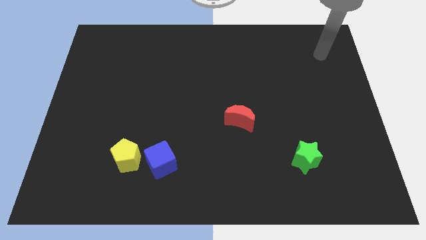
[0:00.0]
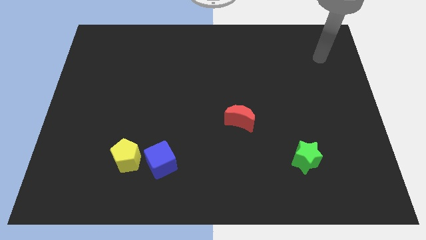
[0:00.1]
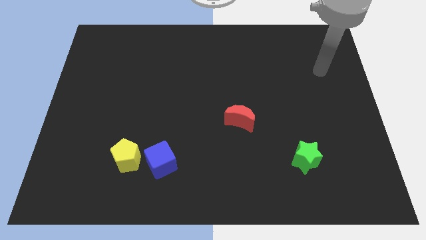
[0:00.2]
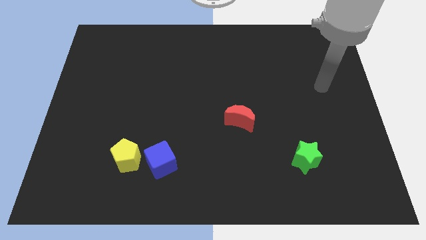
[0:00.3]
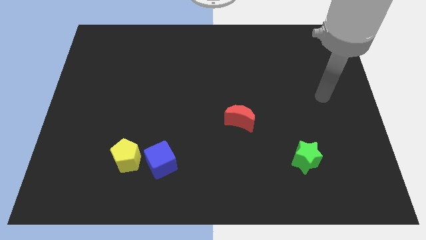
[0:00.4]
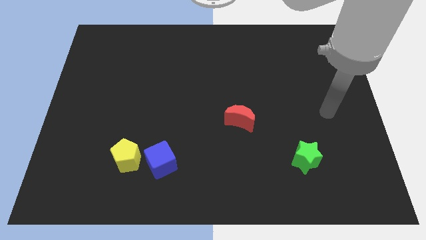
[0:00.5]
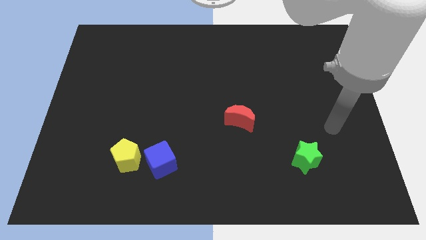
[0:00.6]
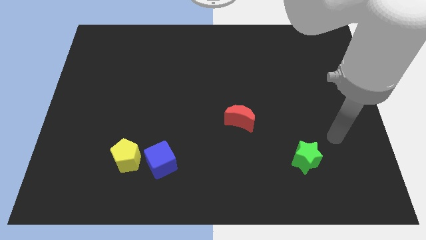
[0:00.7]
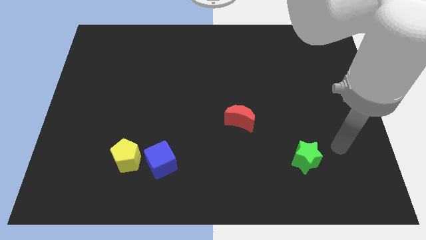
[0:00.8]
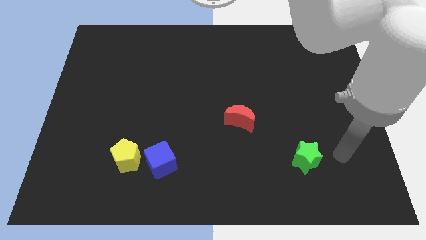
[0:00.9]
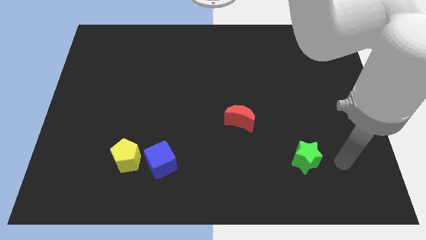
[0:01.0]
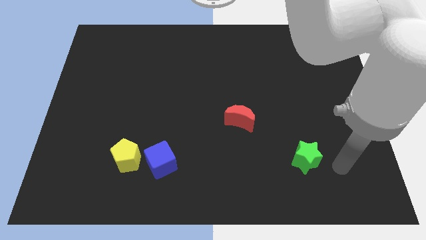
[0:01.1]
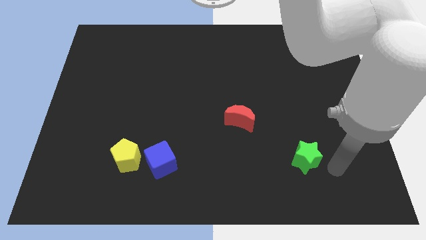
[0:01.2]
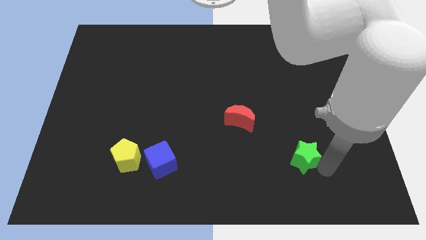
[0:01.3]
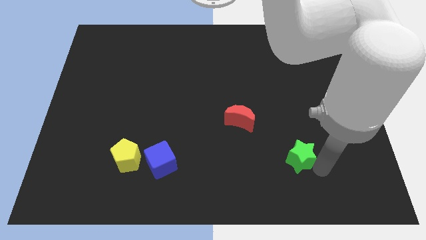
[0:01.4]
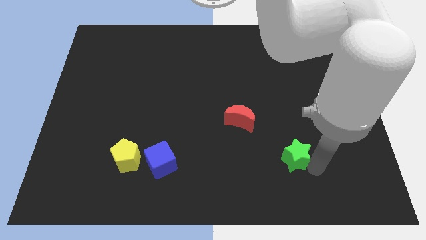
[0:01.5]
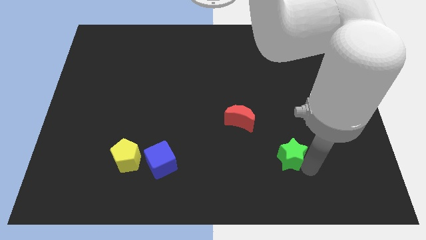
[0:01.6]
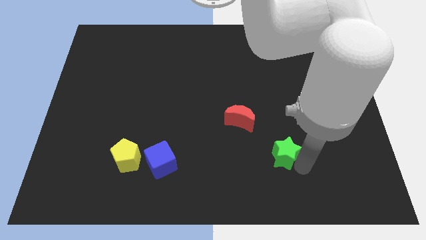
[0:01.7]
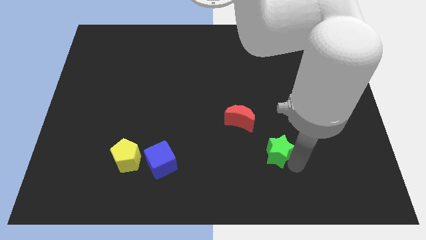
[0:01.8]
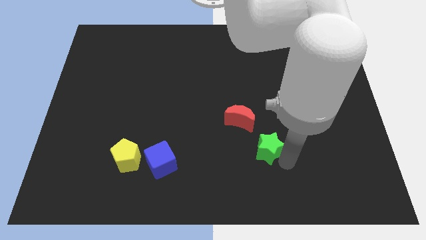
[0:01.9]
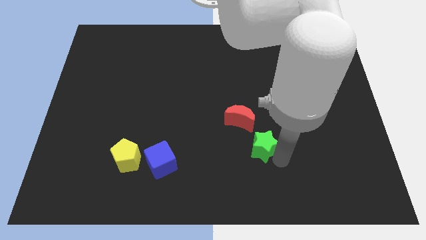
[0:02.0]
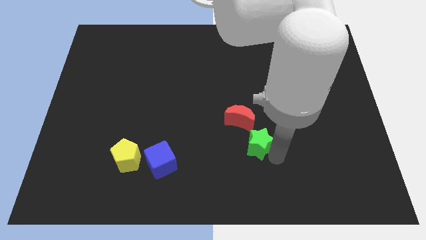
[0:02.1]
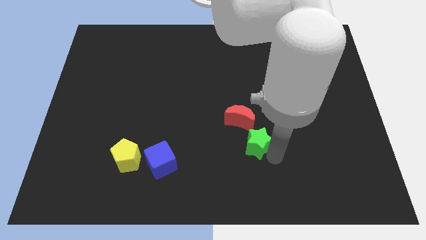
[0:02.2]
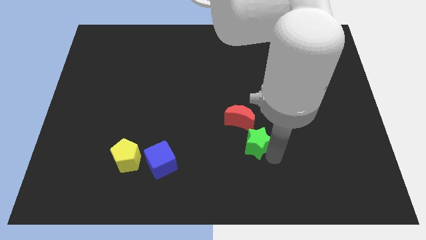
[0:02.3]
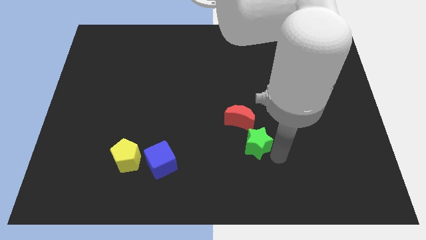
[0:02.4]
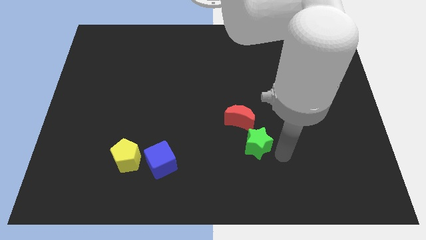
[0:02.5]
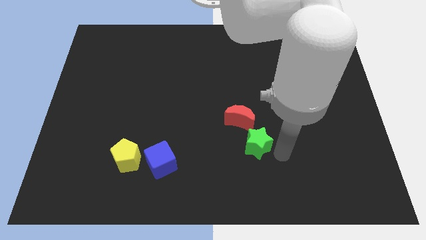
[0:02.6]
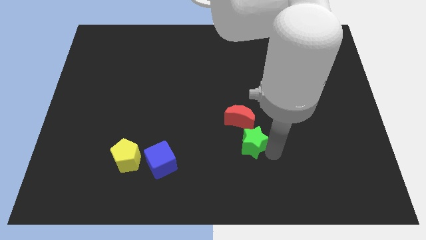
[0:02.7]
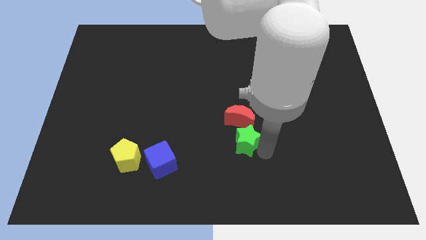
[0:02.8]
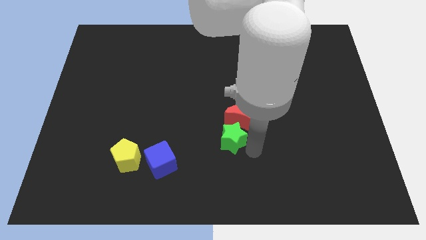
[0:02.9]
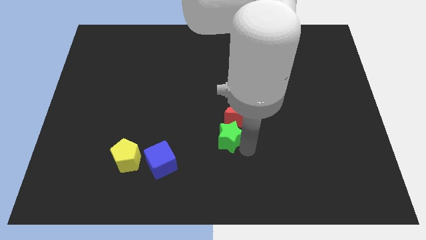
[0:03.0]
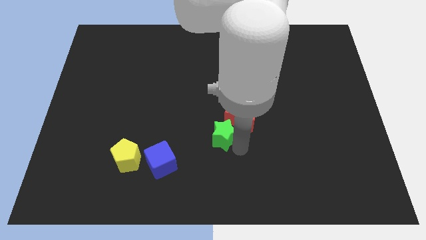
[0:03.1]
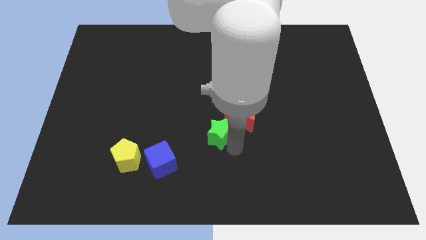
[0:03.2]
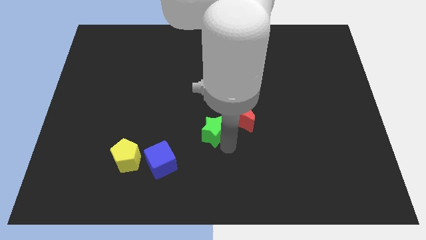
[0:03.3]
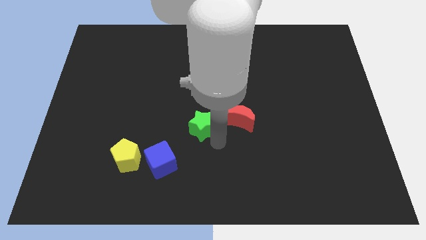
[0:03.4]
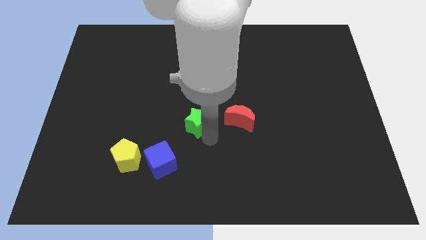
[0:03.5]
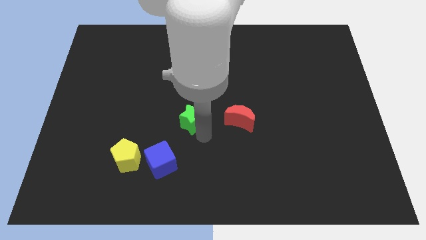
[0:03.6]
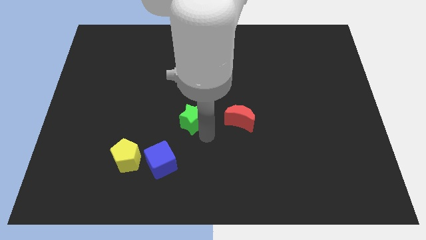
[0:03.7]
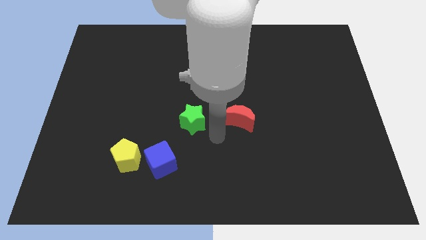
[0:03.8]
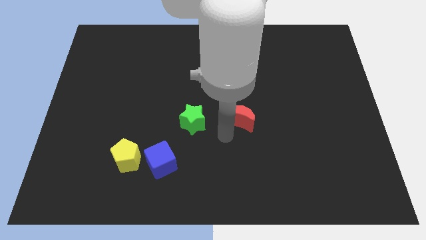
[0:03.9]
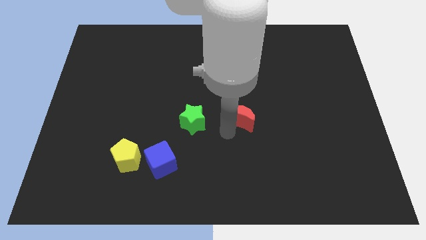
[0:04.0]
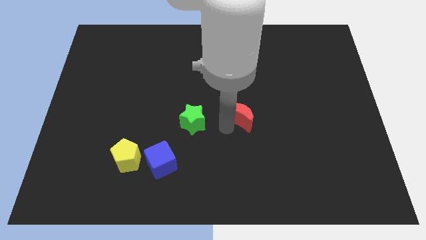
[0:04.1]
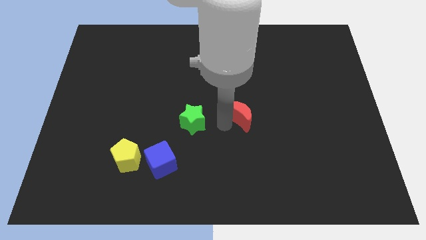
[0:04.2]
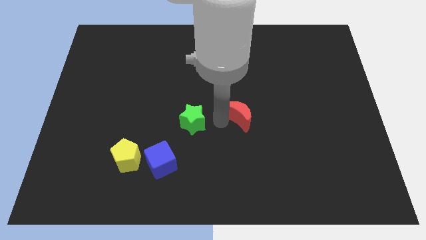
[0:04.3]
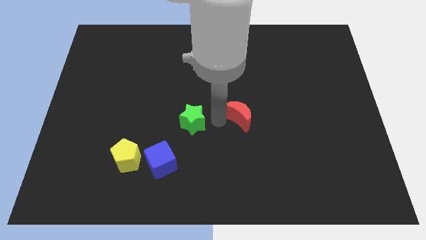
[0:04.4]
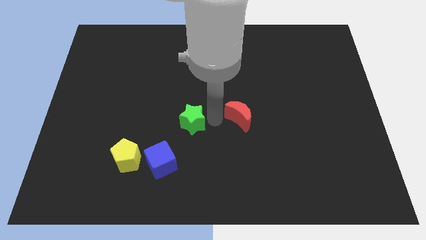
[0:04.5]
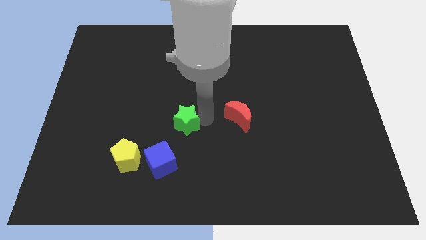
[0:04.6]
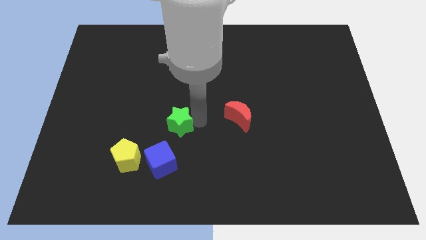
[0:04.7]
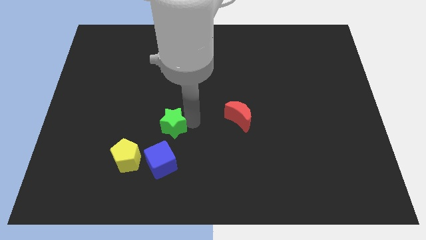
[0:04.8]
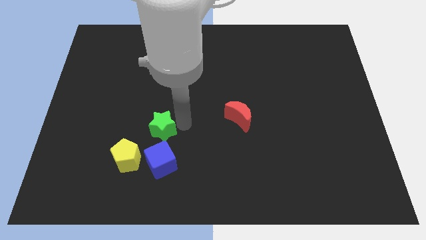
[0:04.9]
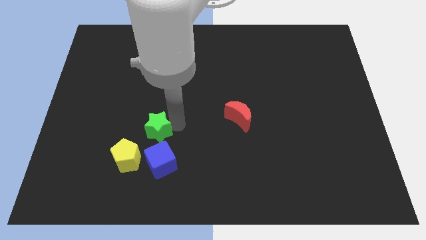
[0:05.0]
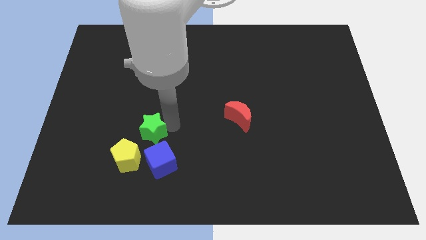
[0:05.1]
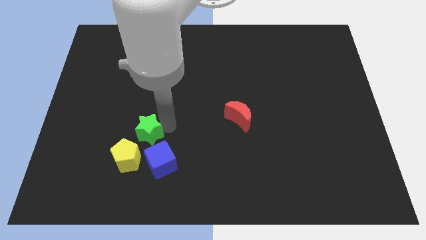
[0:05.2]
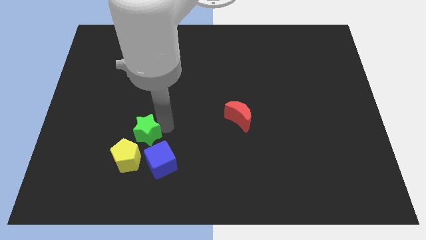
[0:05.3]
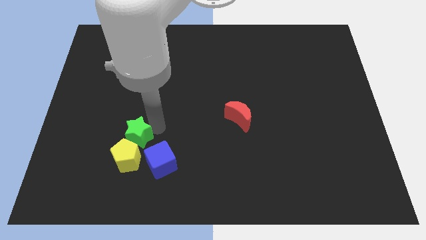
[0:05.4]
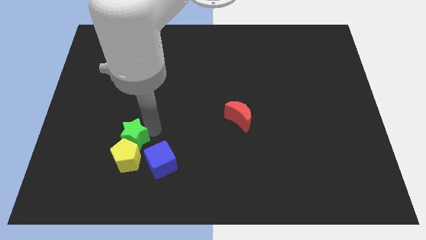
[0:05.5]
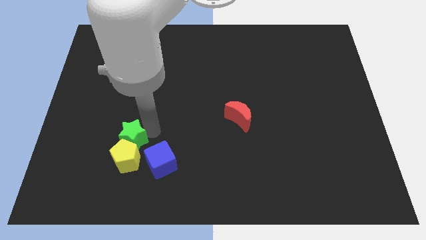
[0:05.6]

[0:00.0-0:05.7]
move the green star next to the pentagon

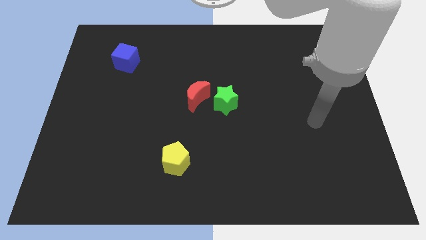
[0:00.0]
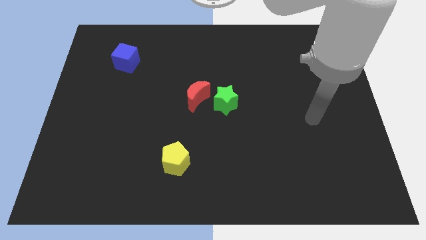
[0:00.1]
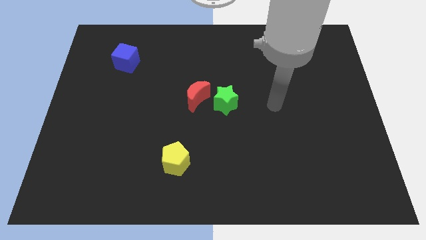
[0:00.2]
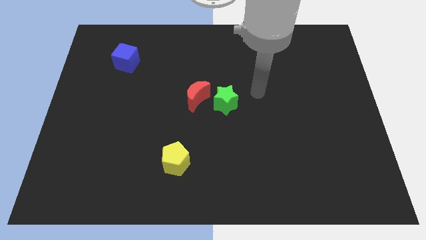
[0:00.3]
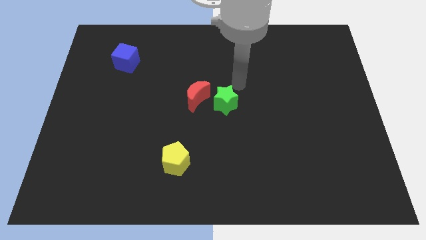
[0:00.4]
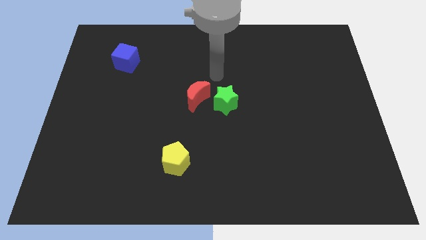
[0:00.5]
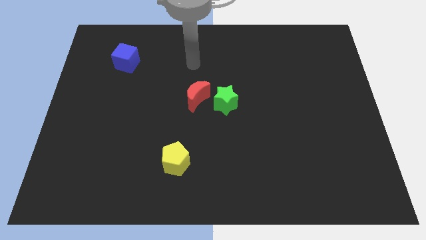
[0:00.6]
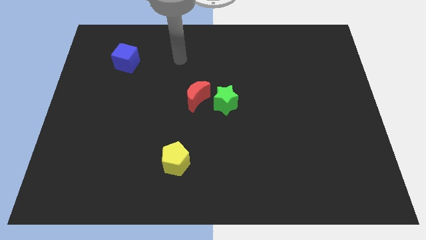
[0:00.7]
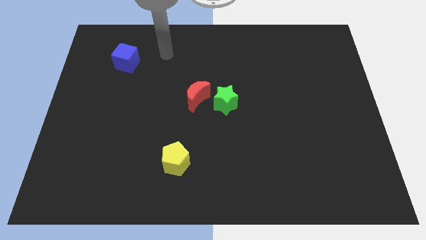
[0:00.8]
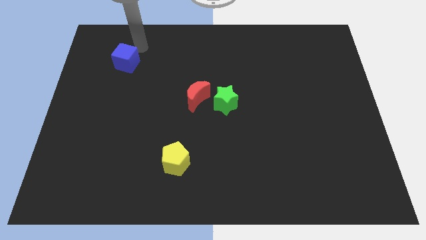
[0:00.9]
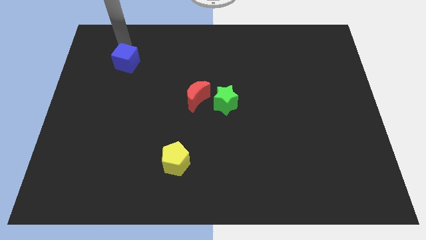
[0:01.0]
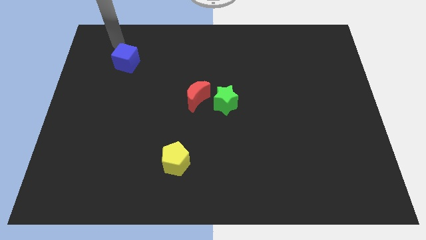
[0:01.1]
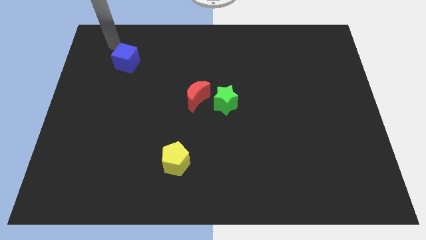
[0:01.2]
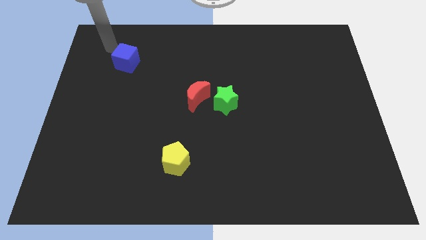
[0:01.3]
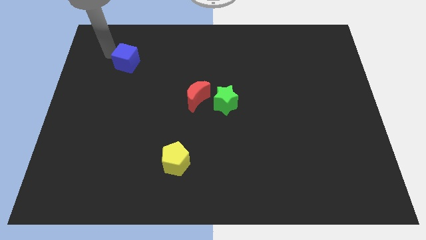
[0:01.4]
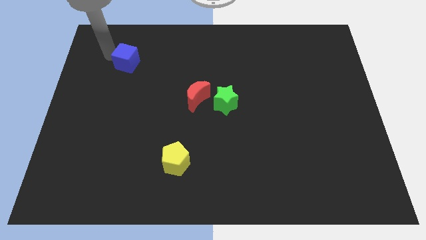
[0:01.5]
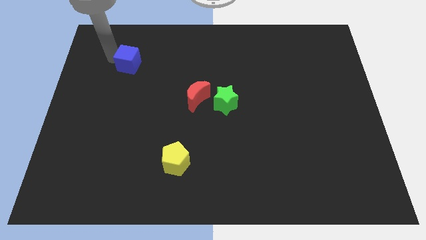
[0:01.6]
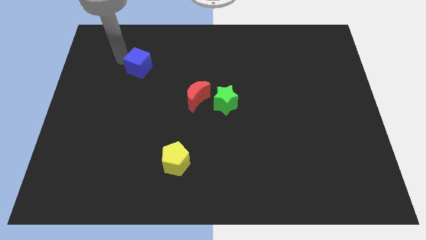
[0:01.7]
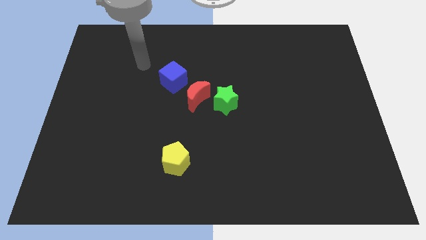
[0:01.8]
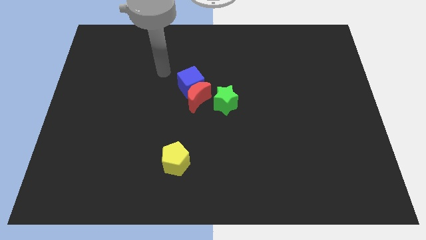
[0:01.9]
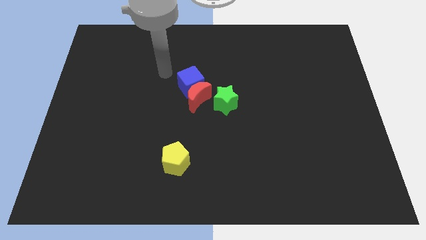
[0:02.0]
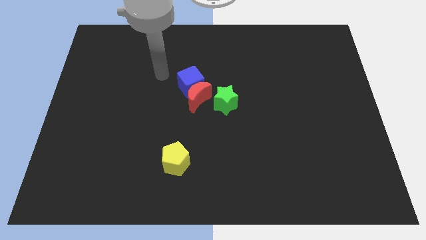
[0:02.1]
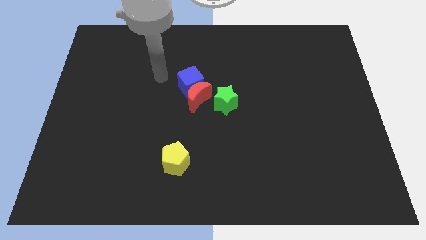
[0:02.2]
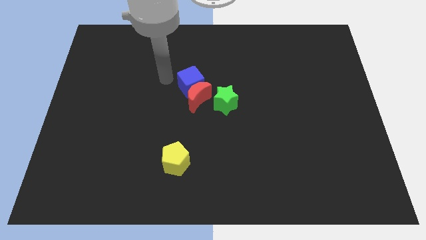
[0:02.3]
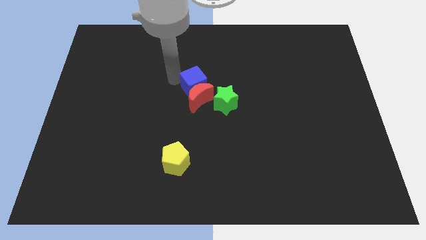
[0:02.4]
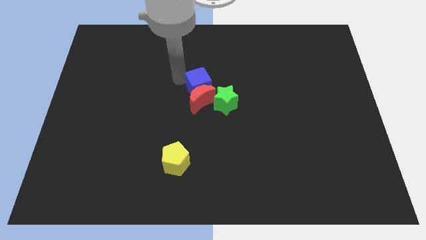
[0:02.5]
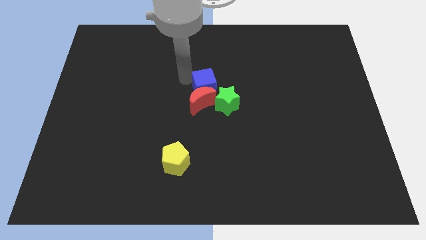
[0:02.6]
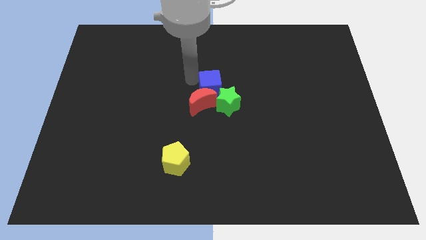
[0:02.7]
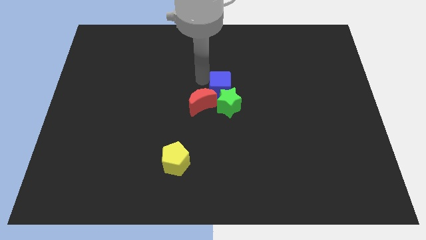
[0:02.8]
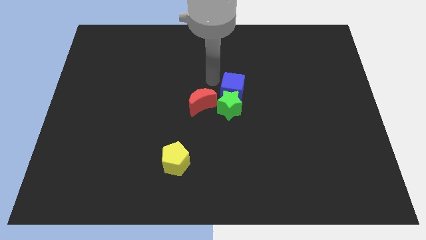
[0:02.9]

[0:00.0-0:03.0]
push the cube close to the green star
